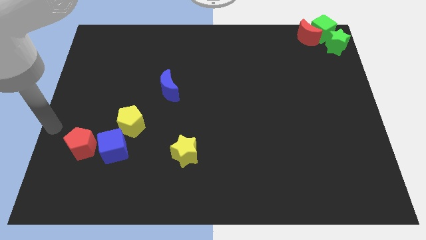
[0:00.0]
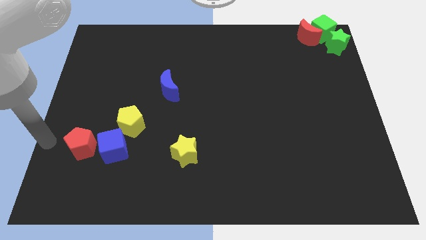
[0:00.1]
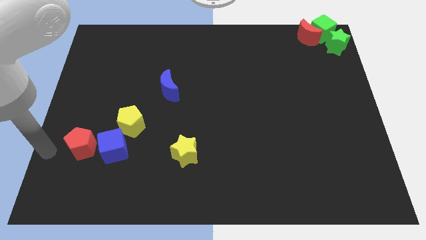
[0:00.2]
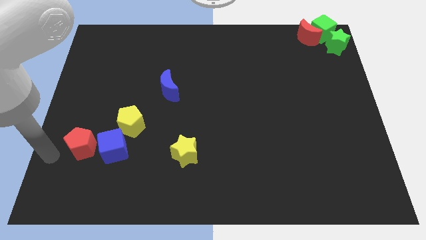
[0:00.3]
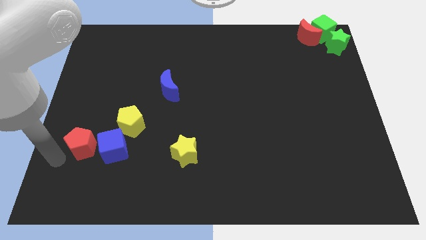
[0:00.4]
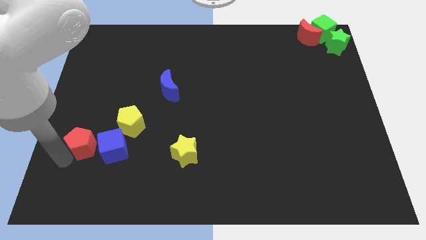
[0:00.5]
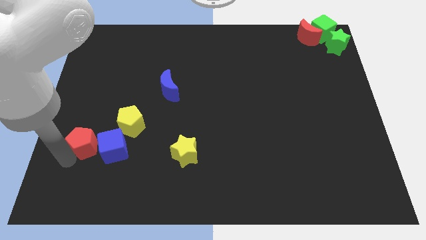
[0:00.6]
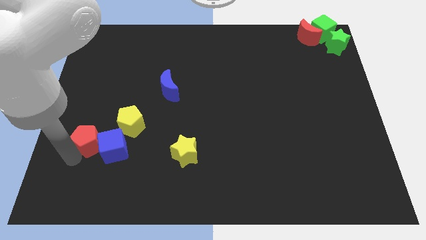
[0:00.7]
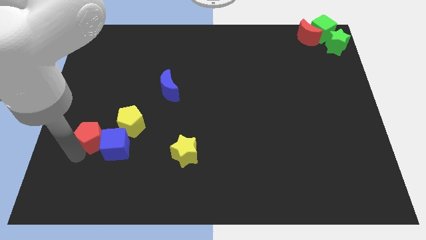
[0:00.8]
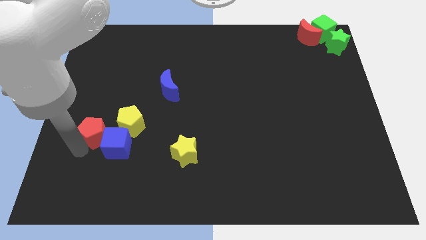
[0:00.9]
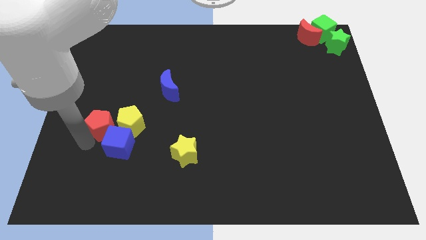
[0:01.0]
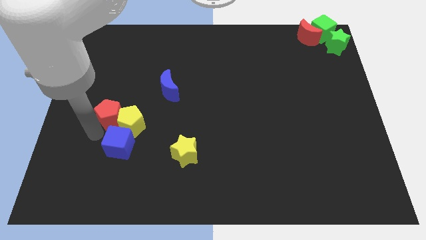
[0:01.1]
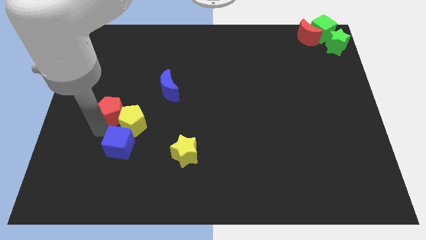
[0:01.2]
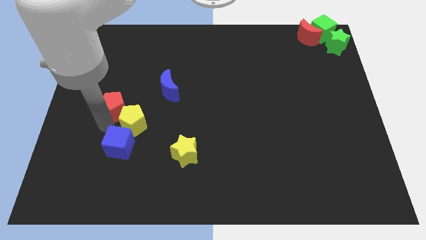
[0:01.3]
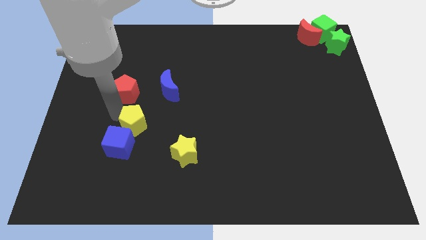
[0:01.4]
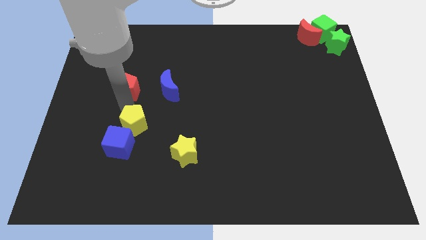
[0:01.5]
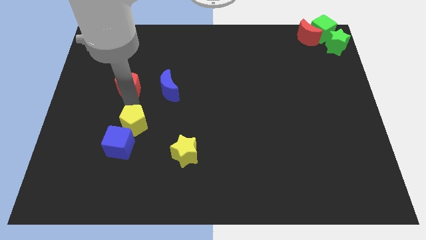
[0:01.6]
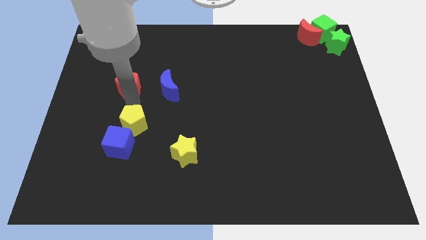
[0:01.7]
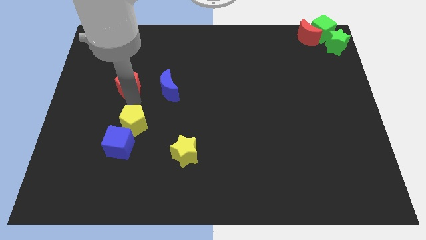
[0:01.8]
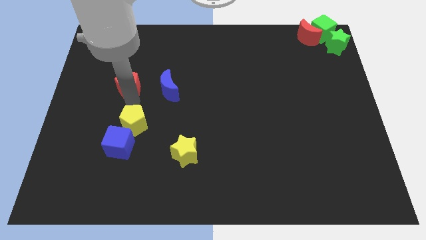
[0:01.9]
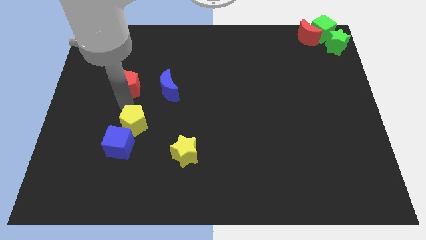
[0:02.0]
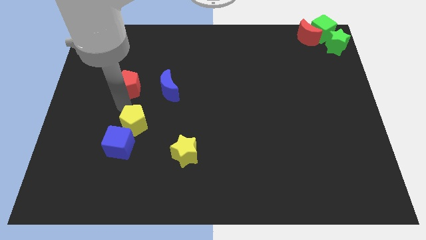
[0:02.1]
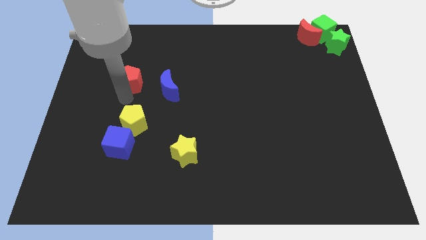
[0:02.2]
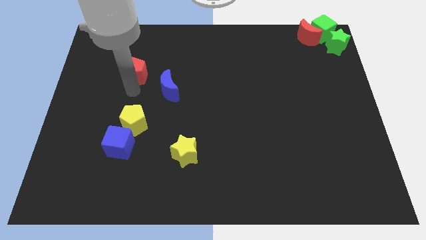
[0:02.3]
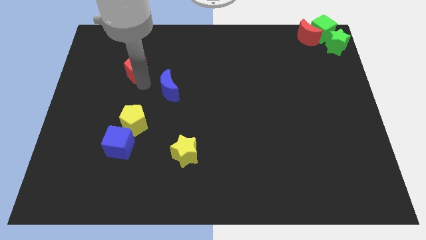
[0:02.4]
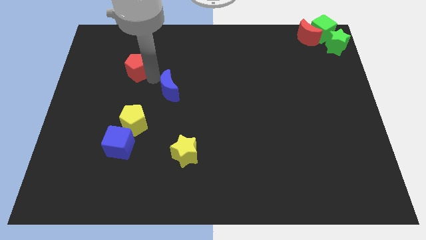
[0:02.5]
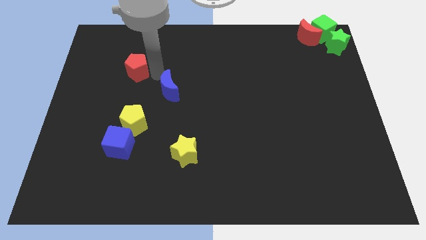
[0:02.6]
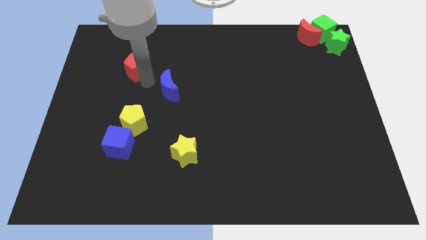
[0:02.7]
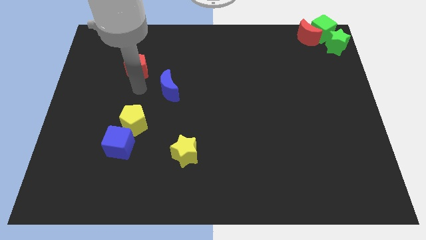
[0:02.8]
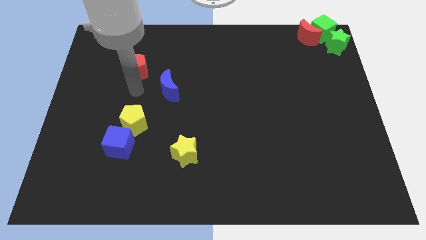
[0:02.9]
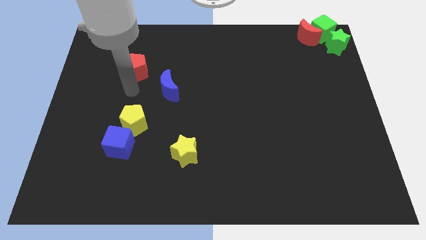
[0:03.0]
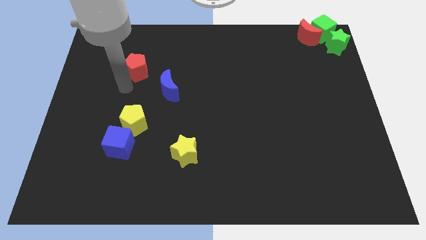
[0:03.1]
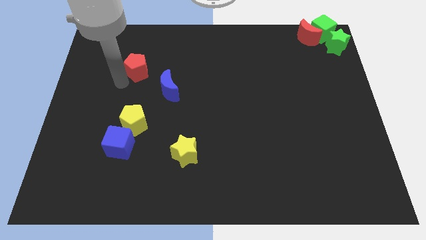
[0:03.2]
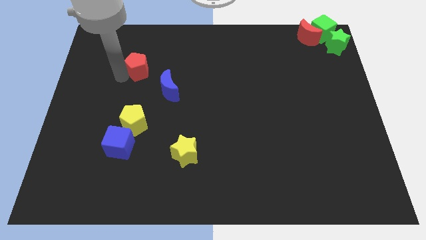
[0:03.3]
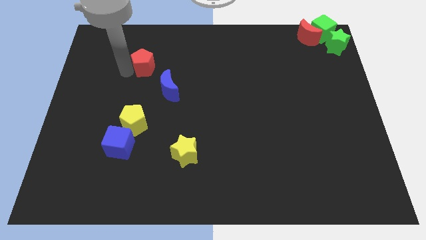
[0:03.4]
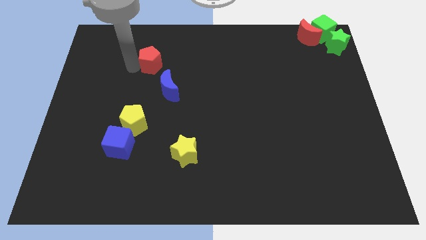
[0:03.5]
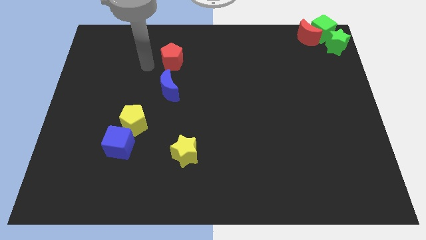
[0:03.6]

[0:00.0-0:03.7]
move the red pentagon to the top of the blue crescent

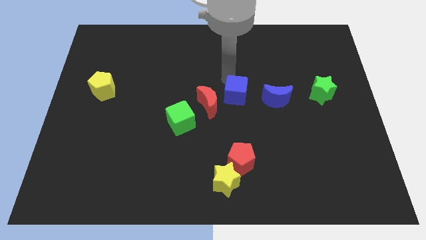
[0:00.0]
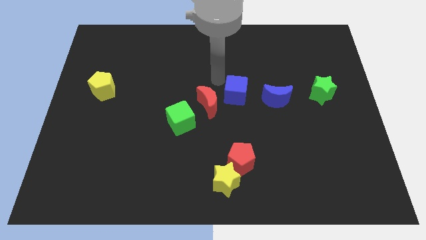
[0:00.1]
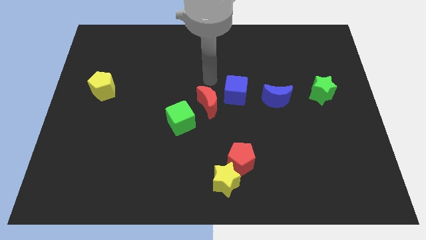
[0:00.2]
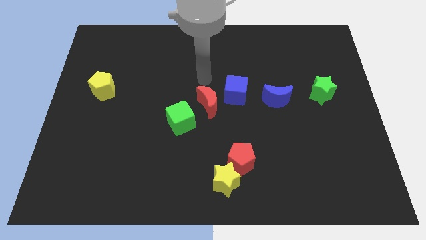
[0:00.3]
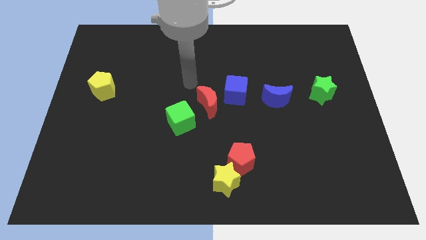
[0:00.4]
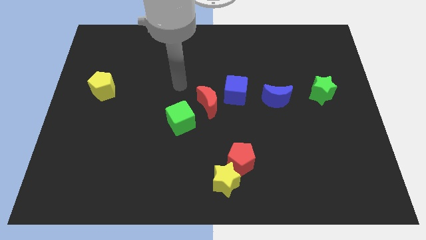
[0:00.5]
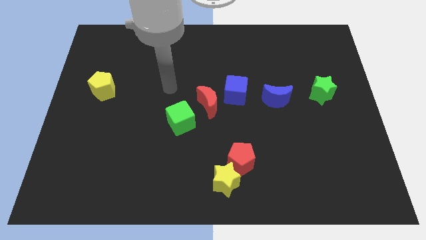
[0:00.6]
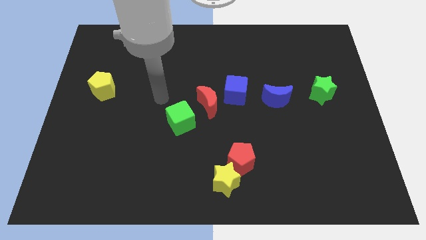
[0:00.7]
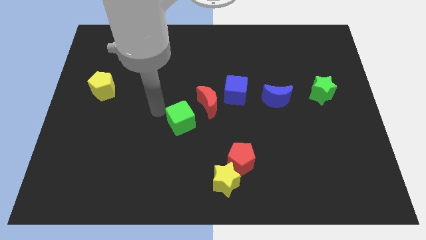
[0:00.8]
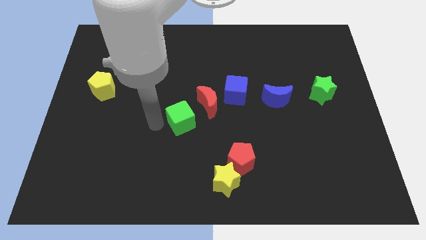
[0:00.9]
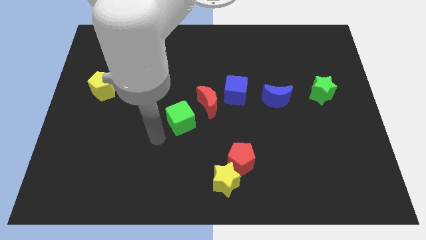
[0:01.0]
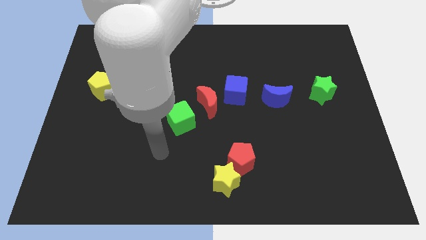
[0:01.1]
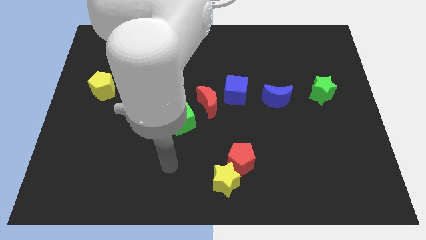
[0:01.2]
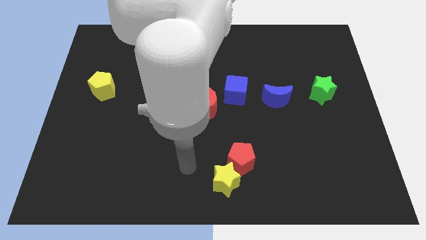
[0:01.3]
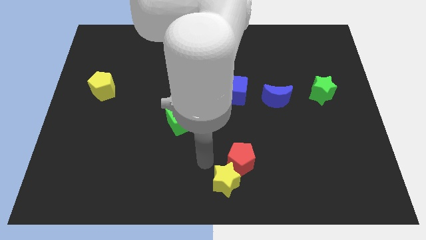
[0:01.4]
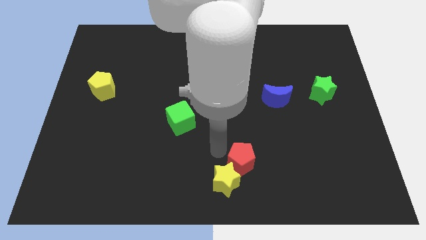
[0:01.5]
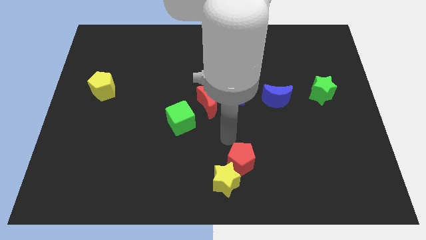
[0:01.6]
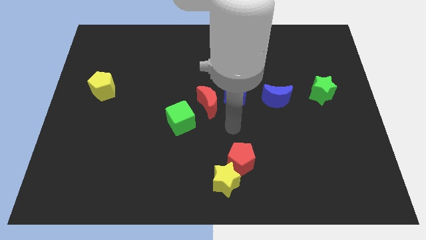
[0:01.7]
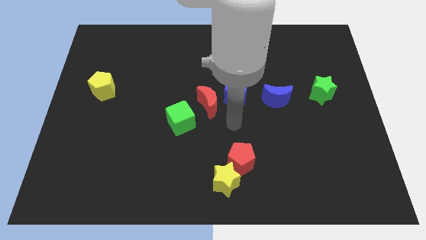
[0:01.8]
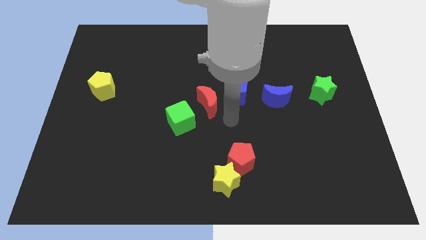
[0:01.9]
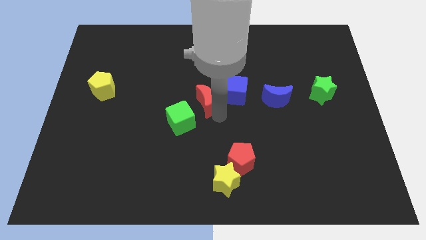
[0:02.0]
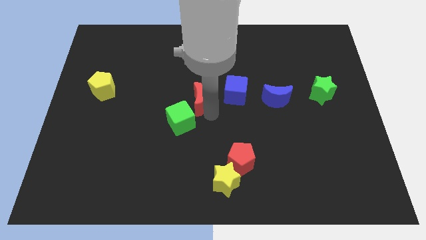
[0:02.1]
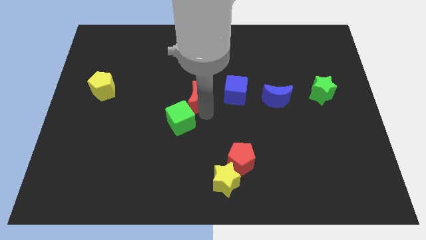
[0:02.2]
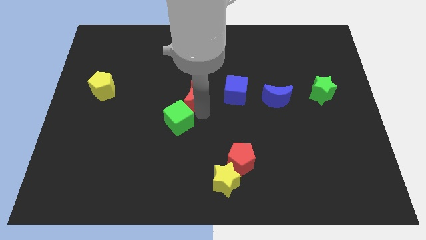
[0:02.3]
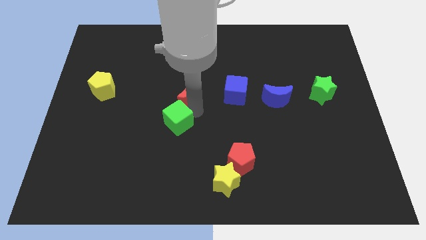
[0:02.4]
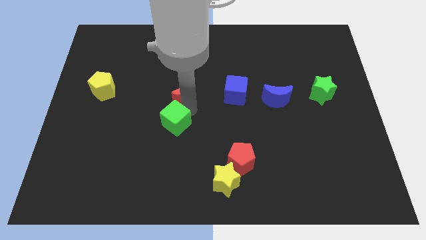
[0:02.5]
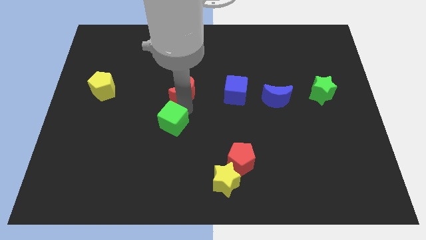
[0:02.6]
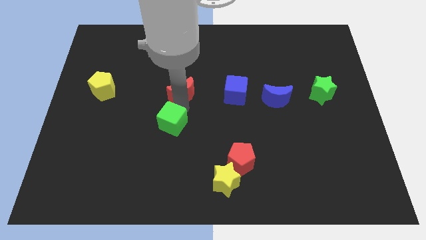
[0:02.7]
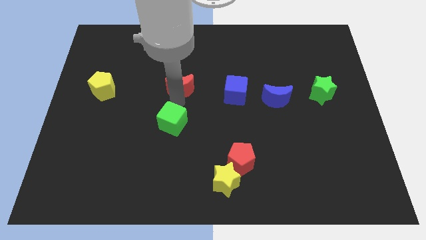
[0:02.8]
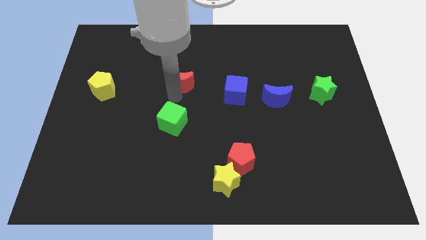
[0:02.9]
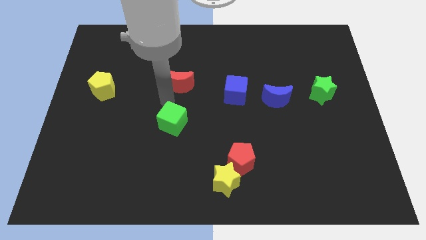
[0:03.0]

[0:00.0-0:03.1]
place the red moon above the green cube

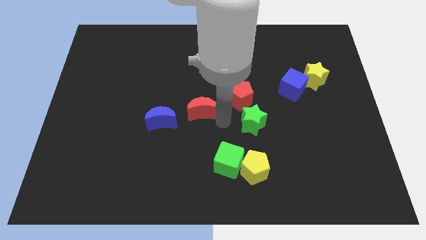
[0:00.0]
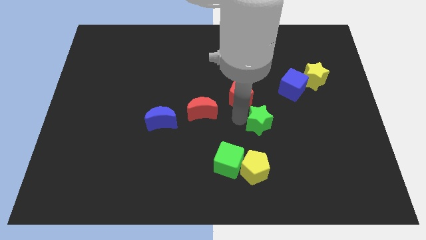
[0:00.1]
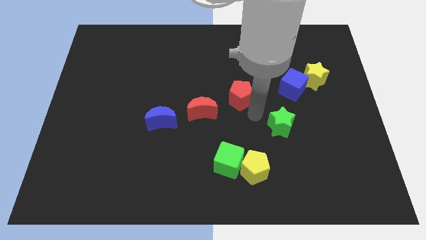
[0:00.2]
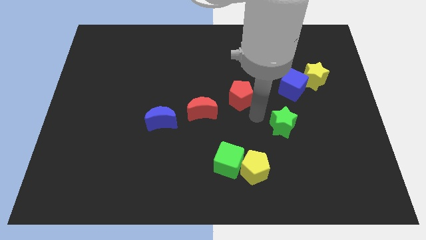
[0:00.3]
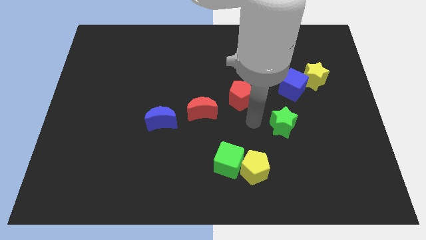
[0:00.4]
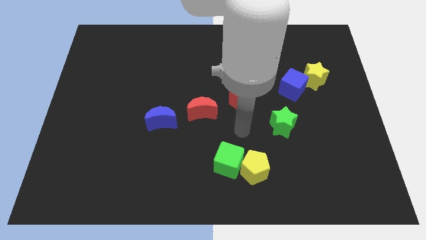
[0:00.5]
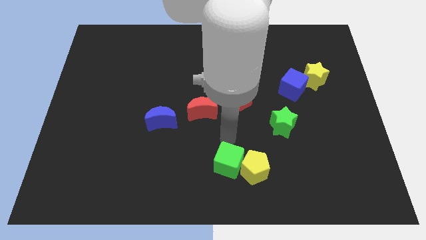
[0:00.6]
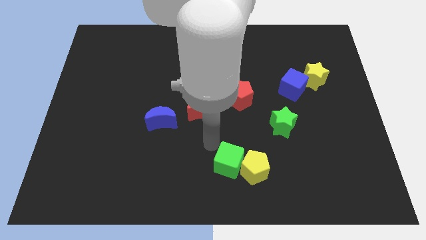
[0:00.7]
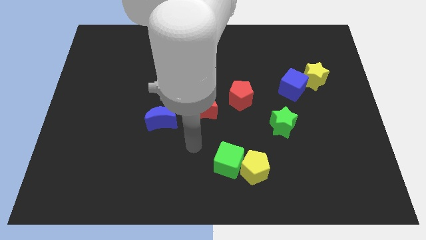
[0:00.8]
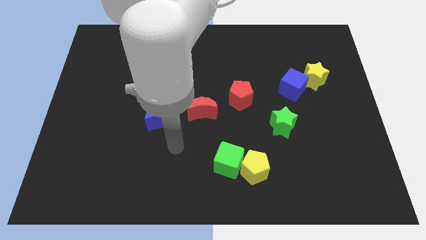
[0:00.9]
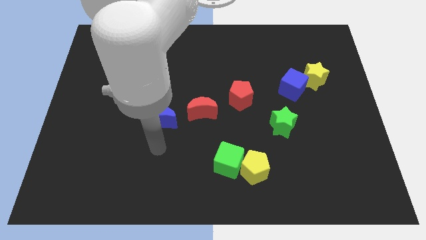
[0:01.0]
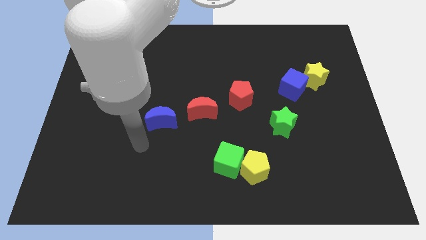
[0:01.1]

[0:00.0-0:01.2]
push the green star to the bottom left of the blue cube

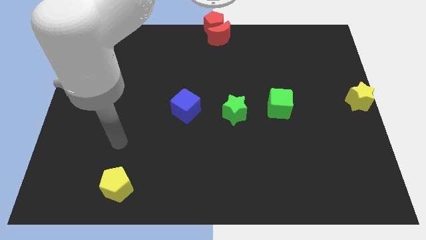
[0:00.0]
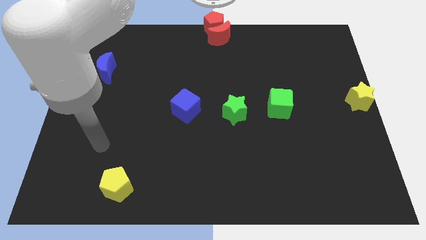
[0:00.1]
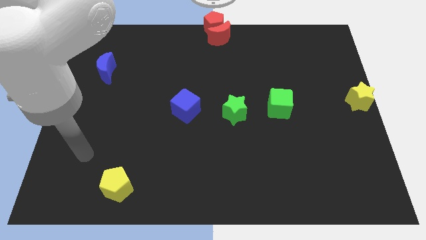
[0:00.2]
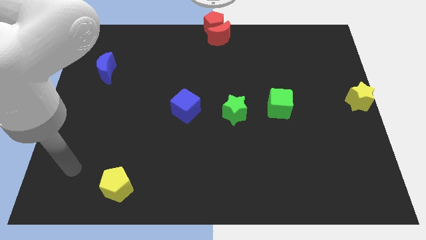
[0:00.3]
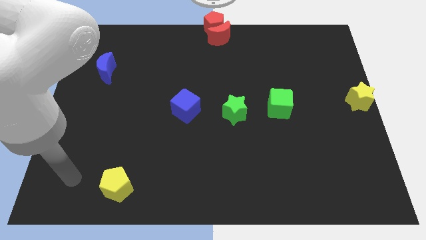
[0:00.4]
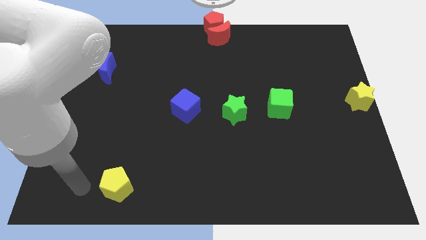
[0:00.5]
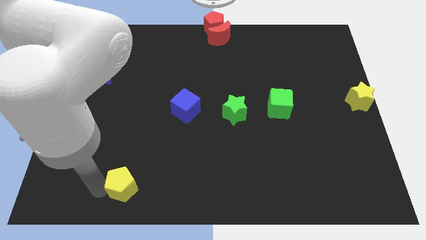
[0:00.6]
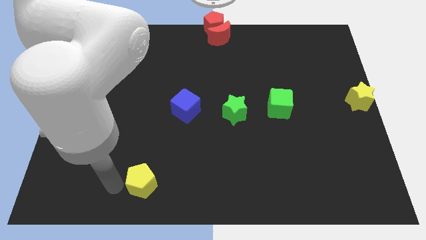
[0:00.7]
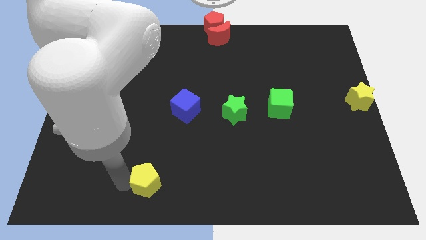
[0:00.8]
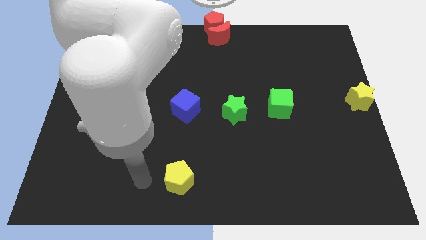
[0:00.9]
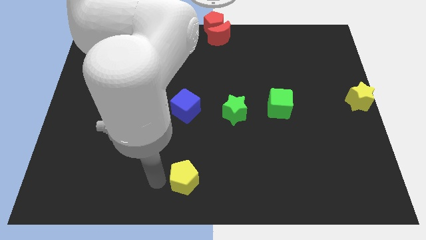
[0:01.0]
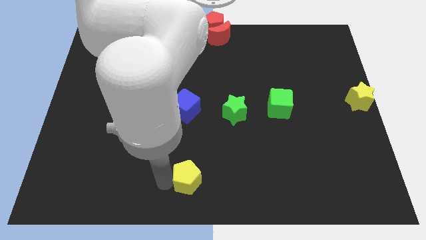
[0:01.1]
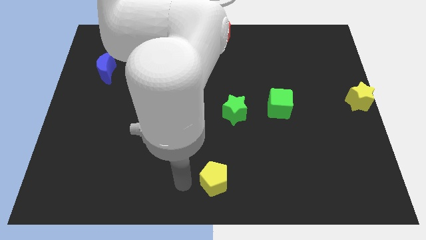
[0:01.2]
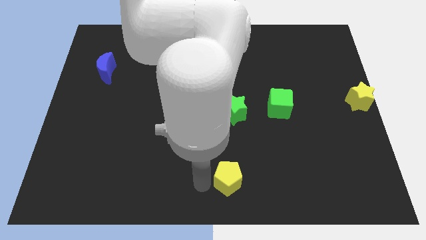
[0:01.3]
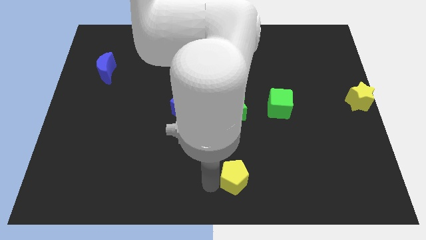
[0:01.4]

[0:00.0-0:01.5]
place the yellow pentagon vertically below the green star
